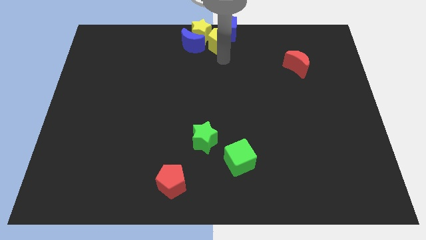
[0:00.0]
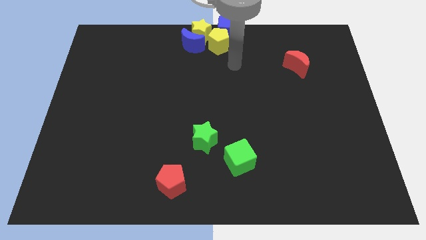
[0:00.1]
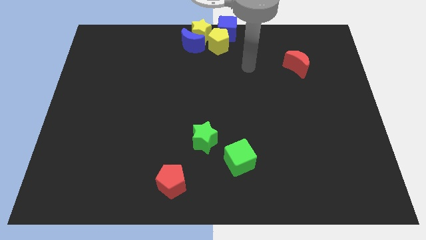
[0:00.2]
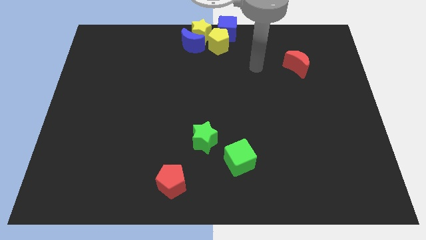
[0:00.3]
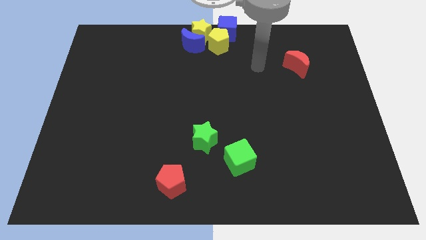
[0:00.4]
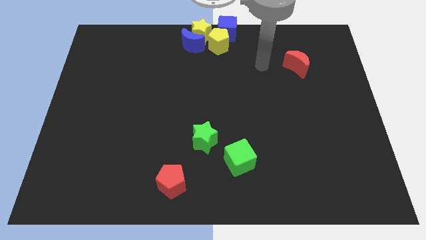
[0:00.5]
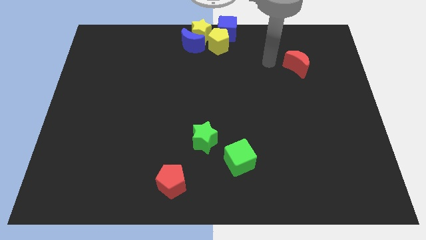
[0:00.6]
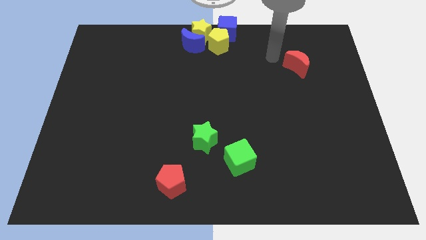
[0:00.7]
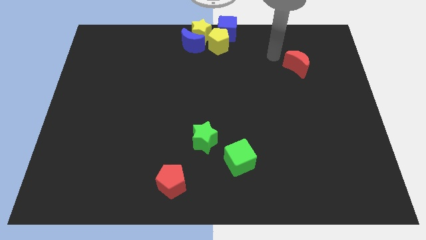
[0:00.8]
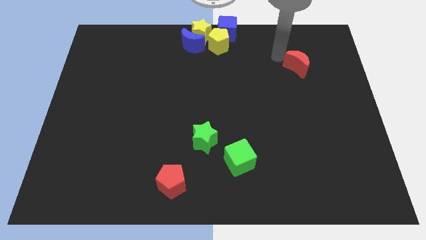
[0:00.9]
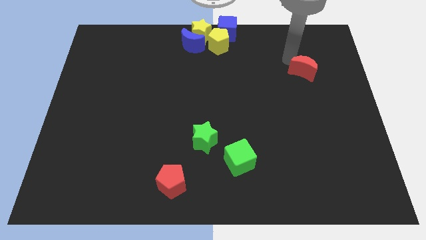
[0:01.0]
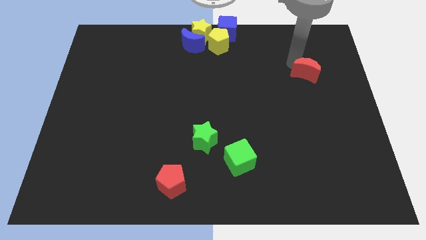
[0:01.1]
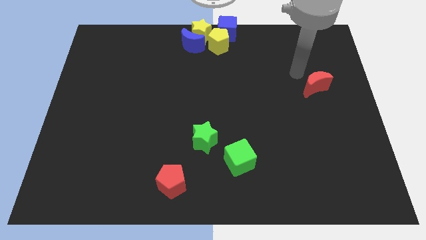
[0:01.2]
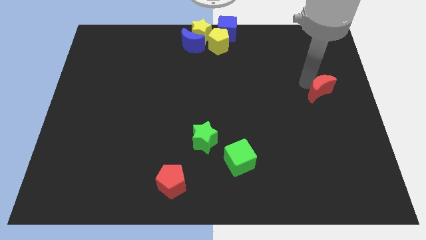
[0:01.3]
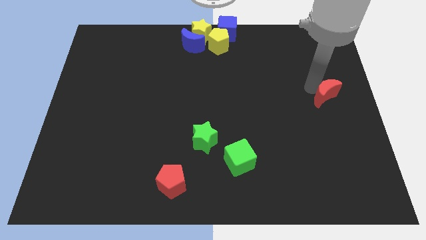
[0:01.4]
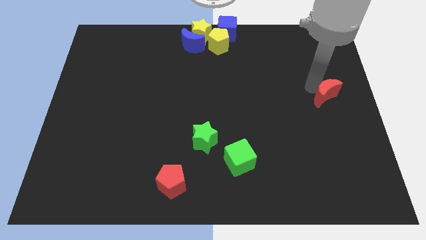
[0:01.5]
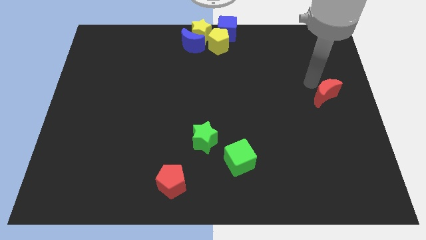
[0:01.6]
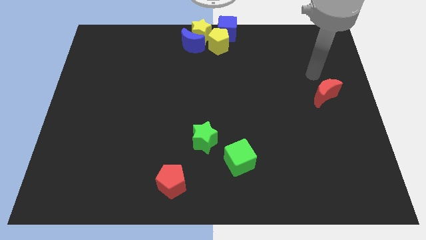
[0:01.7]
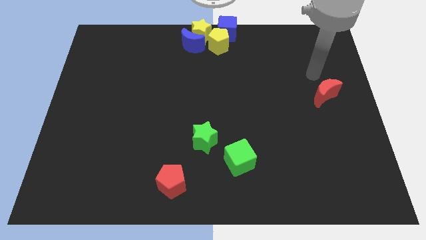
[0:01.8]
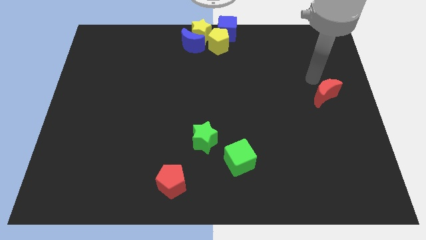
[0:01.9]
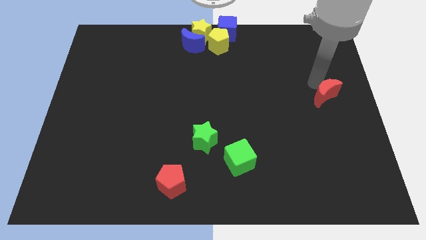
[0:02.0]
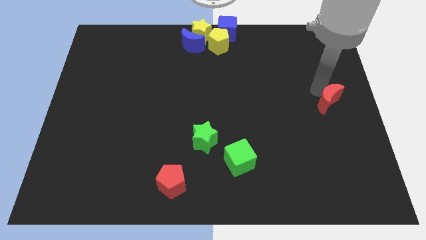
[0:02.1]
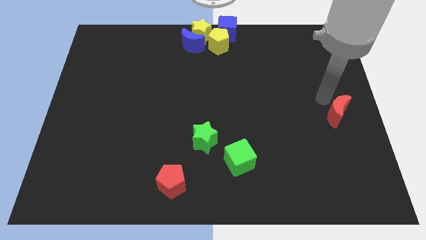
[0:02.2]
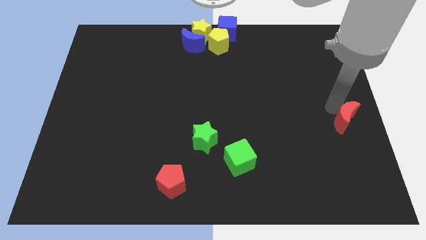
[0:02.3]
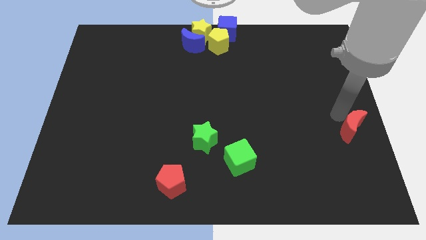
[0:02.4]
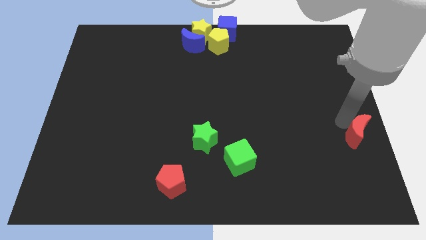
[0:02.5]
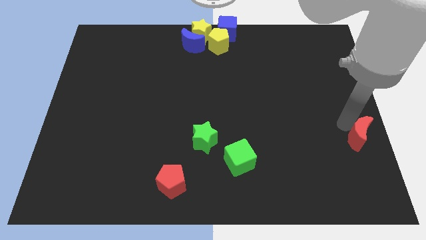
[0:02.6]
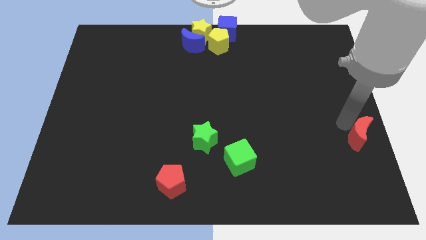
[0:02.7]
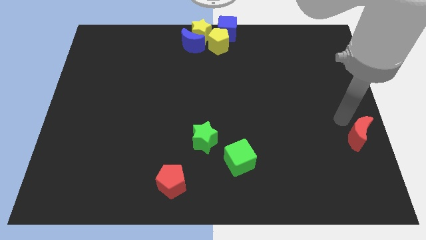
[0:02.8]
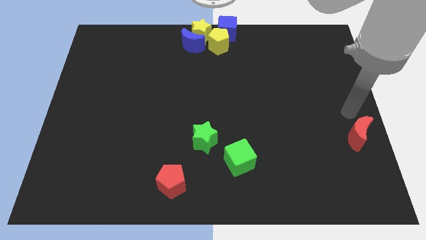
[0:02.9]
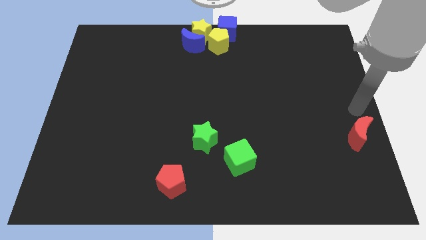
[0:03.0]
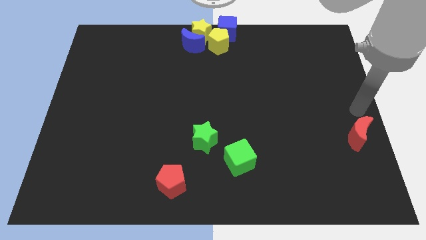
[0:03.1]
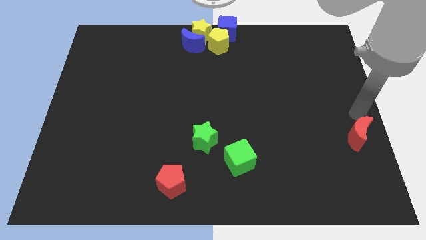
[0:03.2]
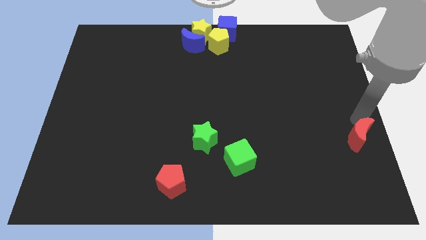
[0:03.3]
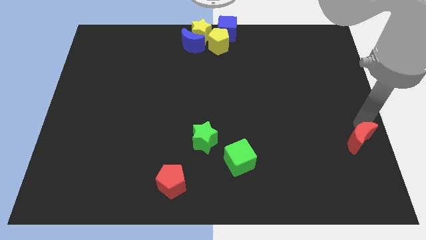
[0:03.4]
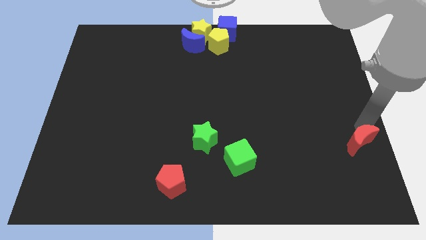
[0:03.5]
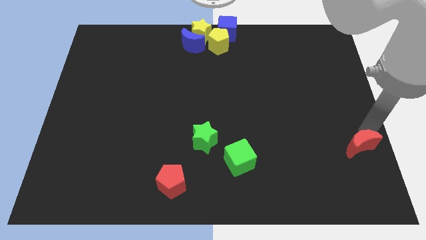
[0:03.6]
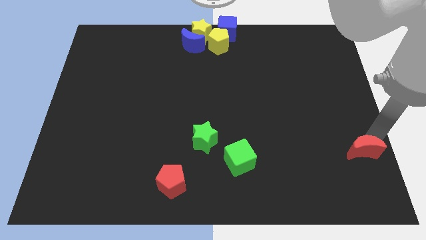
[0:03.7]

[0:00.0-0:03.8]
place the red crescent to the right of the green cube

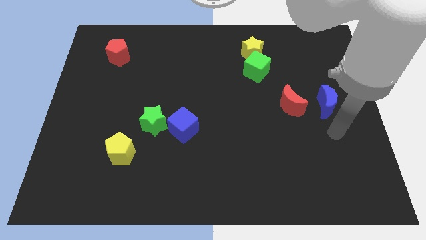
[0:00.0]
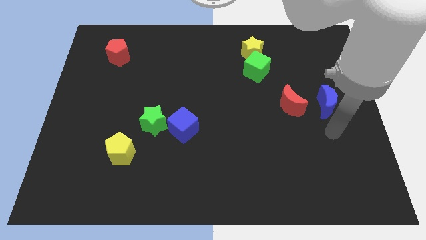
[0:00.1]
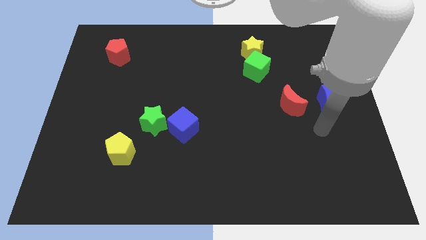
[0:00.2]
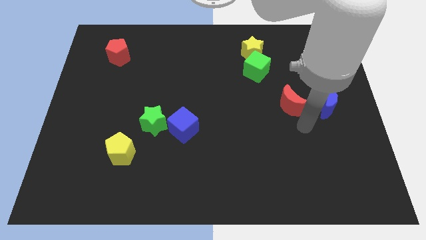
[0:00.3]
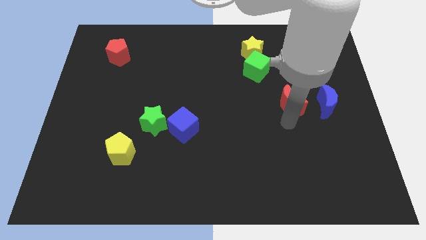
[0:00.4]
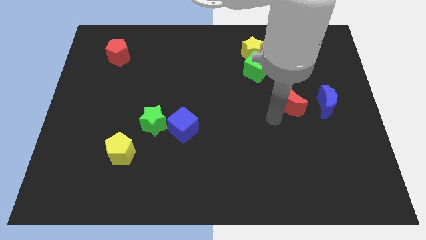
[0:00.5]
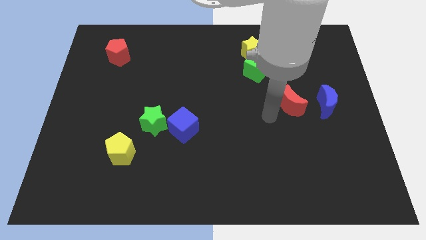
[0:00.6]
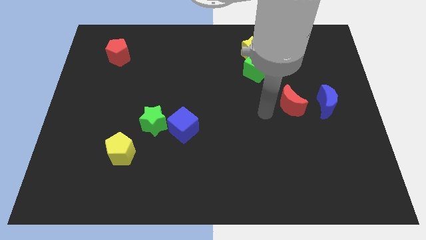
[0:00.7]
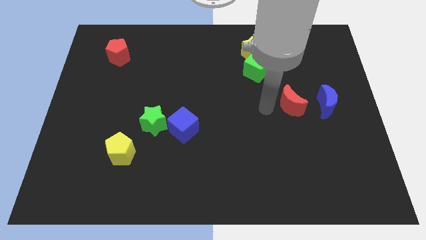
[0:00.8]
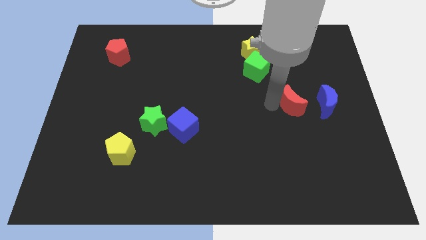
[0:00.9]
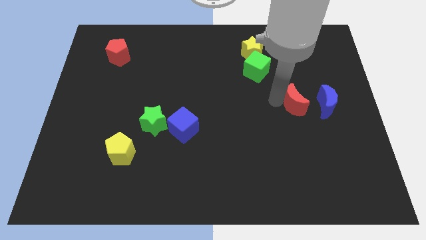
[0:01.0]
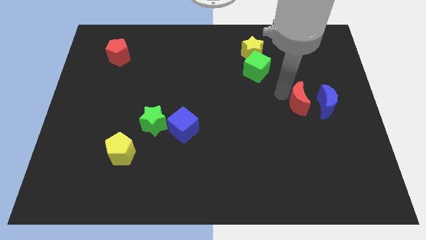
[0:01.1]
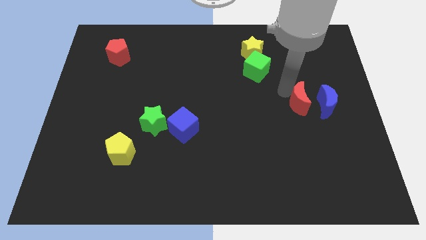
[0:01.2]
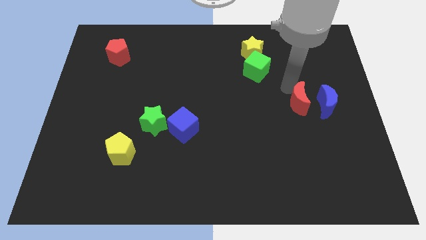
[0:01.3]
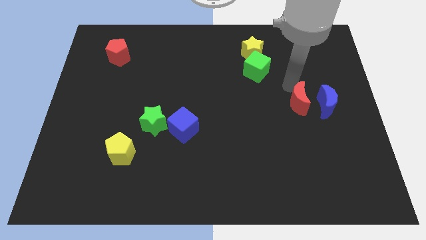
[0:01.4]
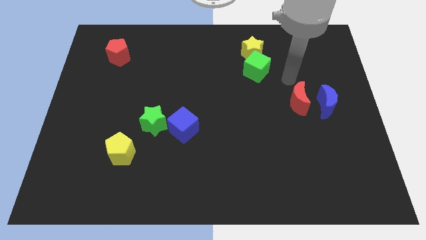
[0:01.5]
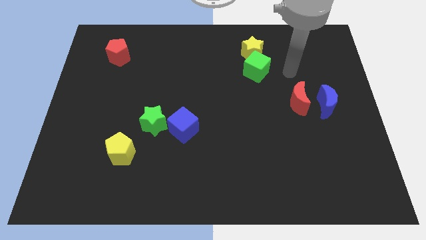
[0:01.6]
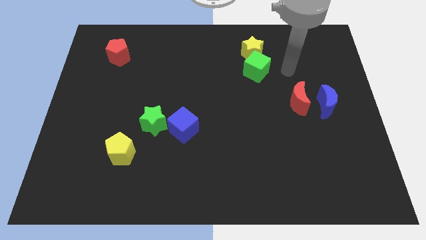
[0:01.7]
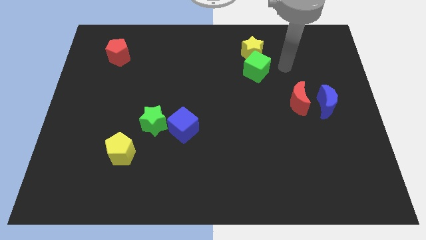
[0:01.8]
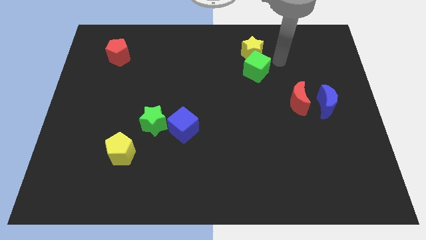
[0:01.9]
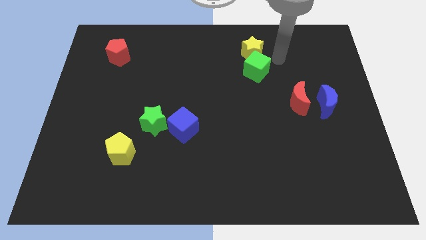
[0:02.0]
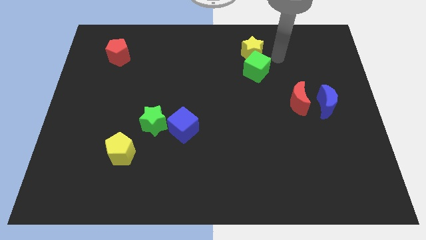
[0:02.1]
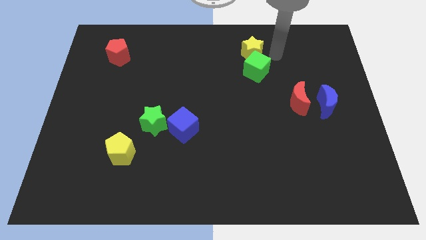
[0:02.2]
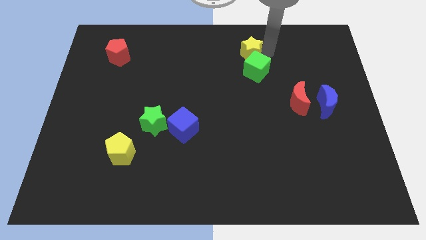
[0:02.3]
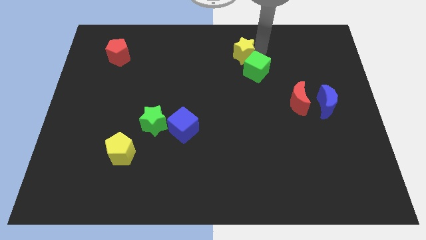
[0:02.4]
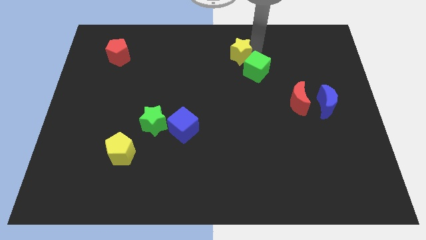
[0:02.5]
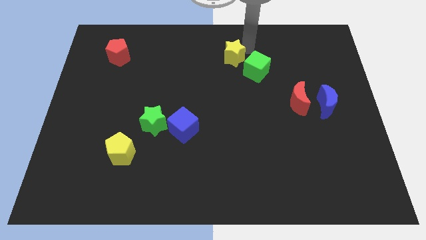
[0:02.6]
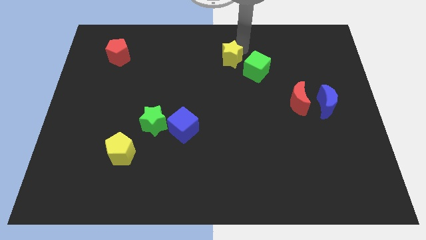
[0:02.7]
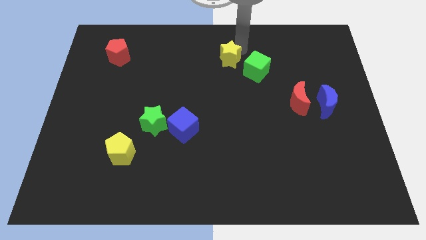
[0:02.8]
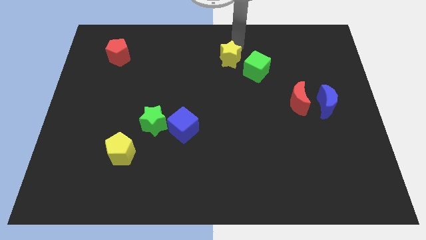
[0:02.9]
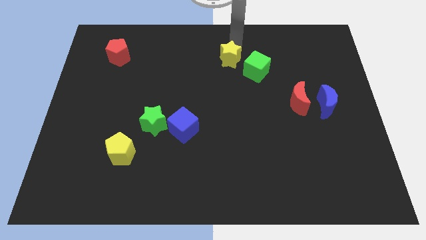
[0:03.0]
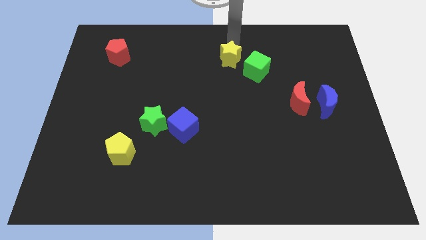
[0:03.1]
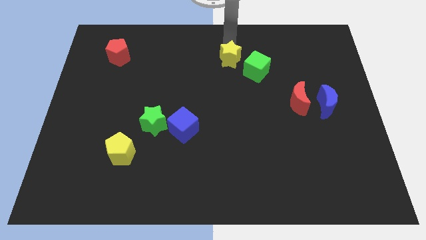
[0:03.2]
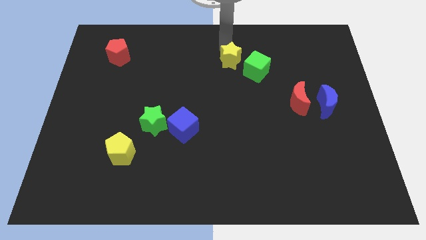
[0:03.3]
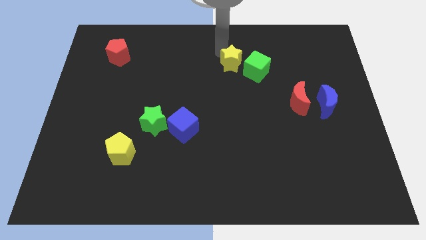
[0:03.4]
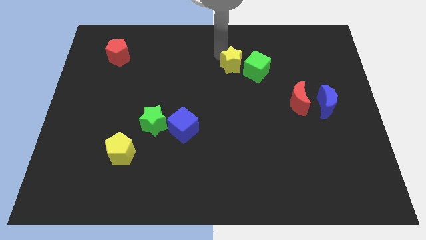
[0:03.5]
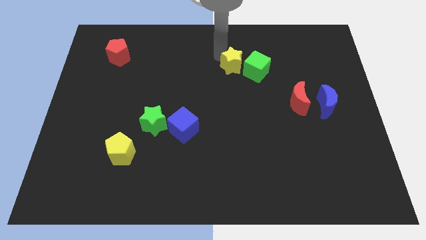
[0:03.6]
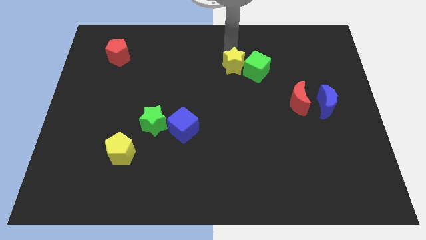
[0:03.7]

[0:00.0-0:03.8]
place yellow star to the left of green cube

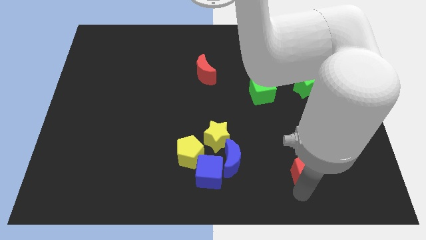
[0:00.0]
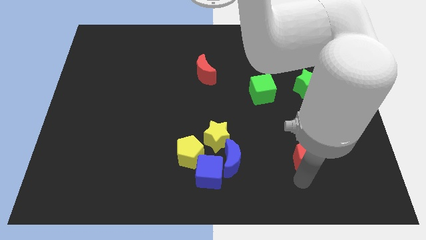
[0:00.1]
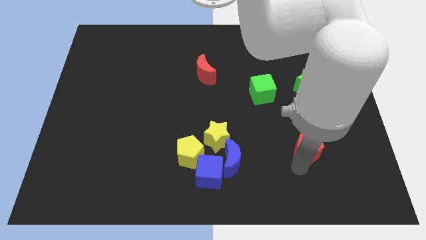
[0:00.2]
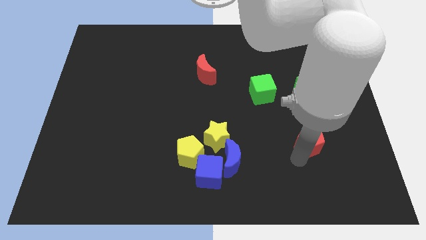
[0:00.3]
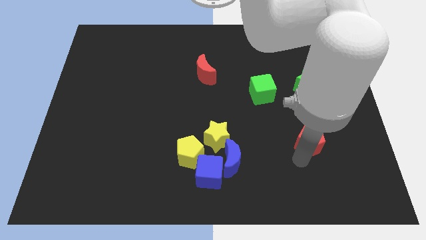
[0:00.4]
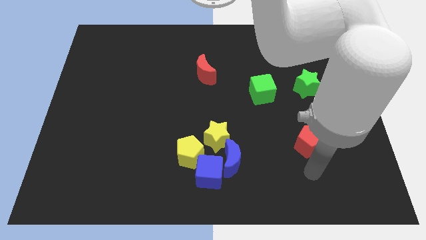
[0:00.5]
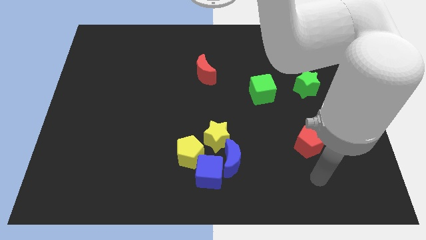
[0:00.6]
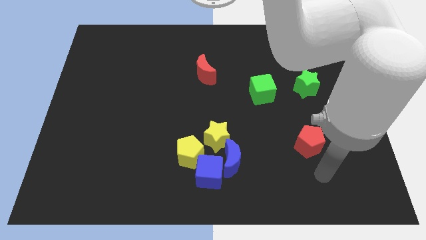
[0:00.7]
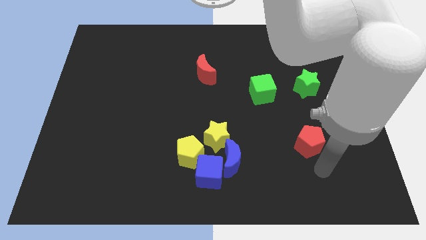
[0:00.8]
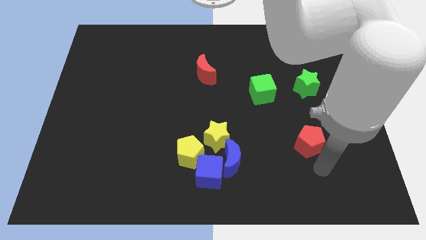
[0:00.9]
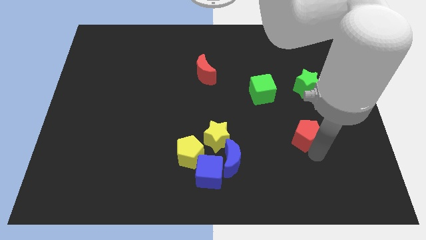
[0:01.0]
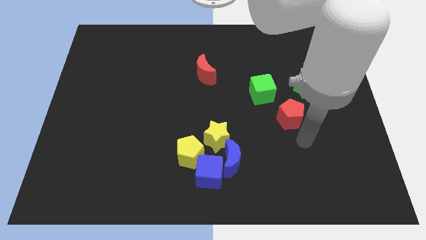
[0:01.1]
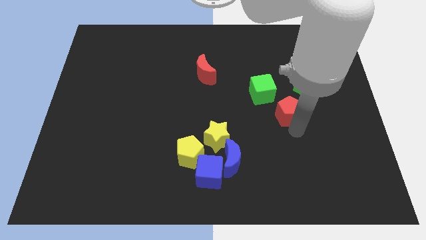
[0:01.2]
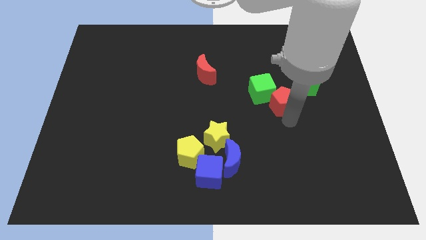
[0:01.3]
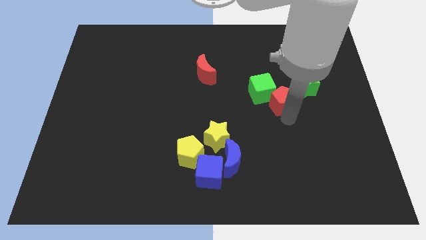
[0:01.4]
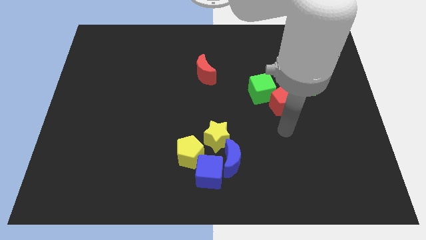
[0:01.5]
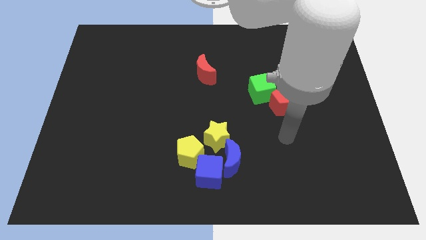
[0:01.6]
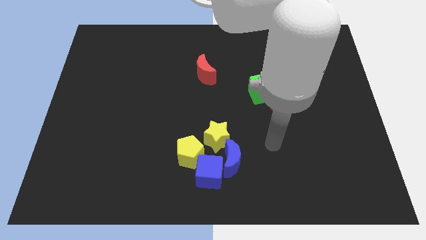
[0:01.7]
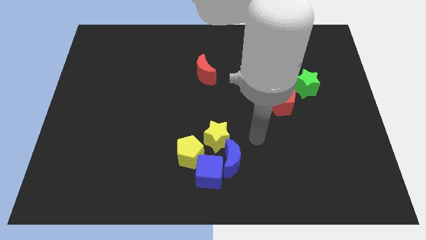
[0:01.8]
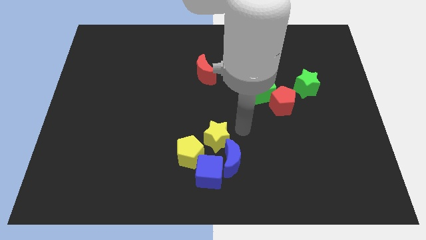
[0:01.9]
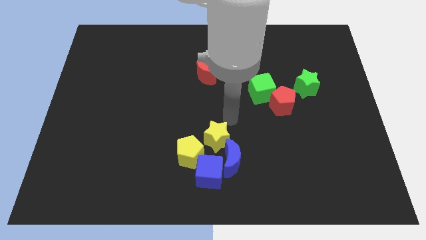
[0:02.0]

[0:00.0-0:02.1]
place the red pentagon towards the bottom right side of the green cube
